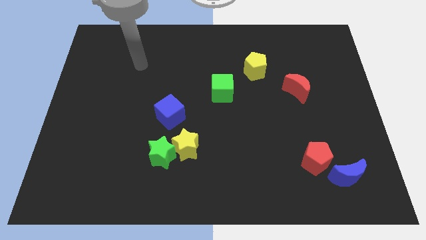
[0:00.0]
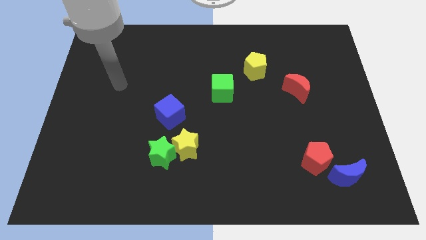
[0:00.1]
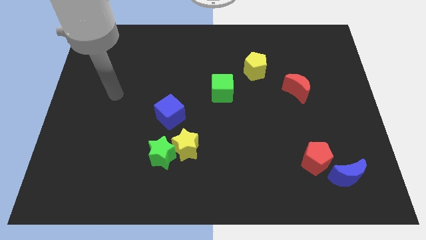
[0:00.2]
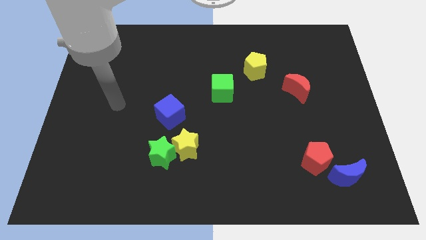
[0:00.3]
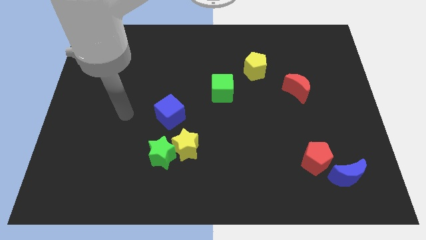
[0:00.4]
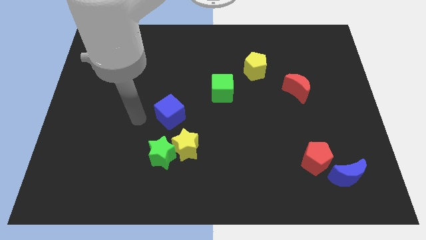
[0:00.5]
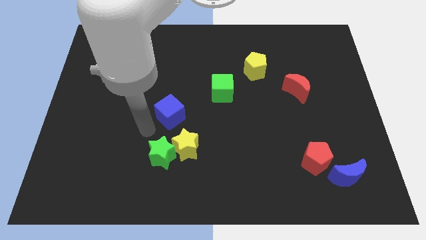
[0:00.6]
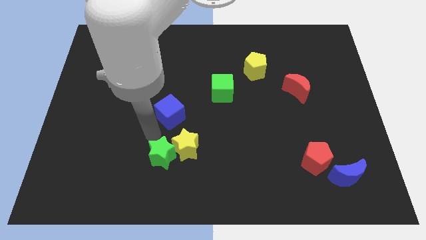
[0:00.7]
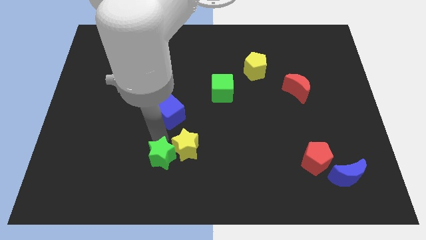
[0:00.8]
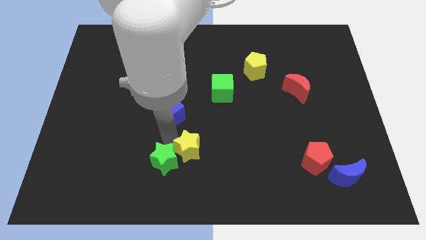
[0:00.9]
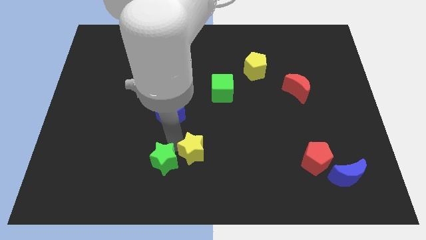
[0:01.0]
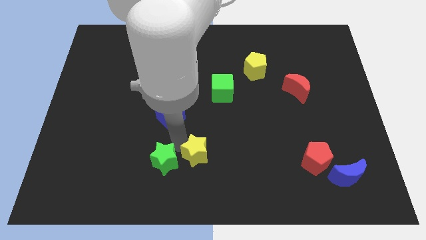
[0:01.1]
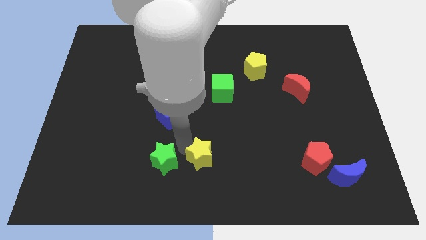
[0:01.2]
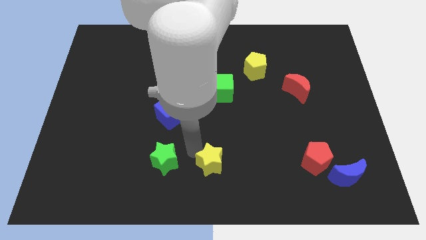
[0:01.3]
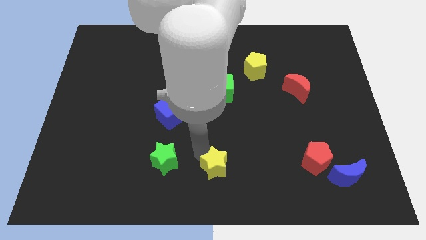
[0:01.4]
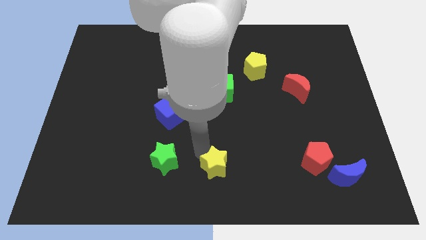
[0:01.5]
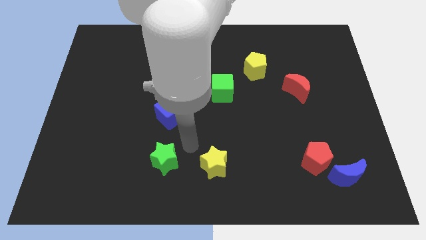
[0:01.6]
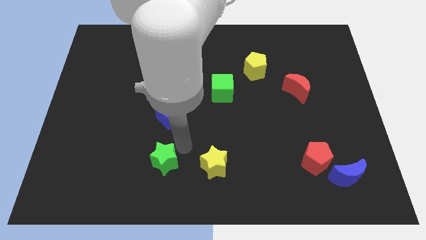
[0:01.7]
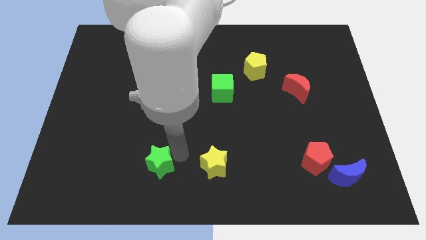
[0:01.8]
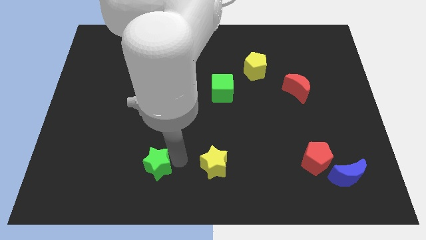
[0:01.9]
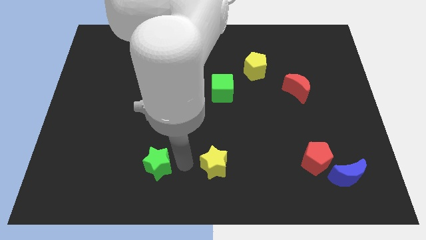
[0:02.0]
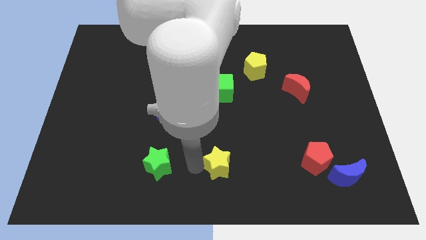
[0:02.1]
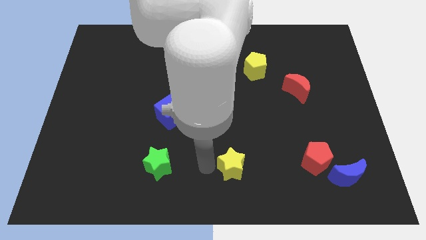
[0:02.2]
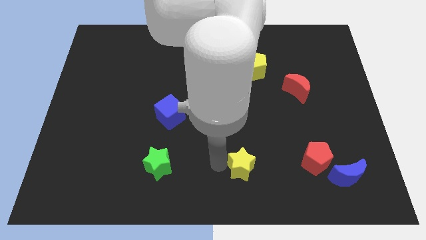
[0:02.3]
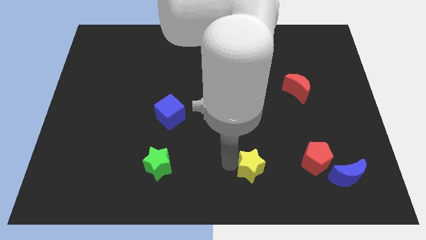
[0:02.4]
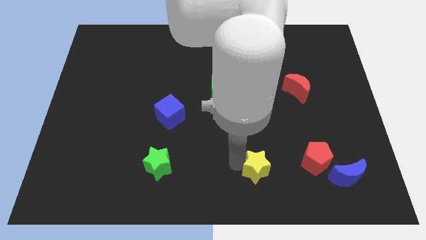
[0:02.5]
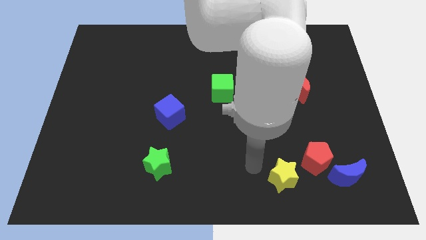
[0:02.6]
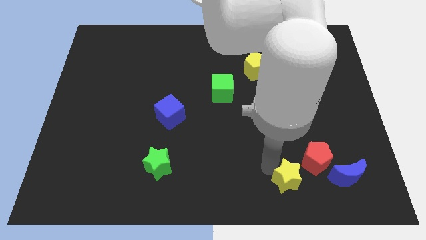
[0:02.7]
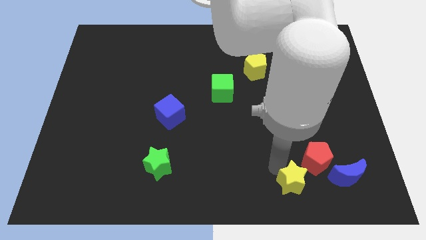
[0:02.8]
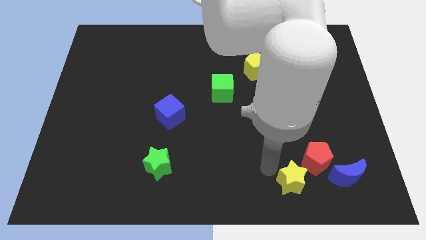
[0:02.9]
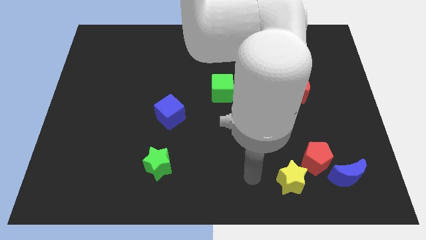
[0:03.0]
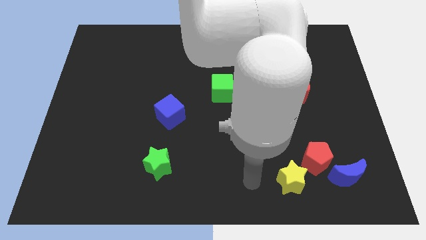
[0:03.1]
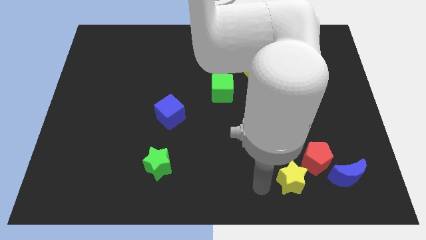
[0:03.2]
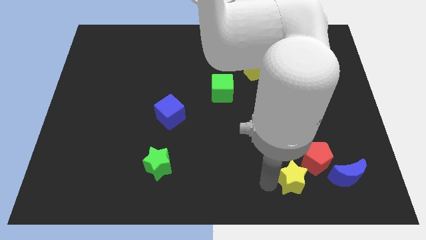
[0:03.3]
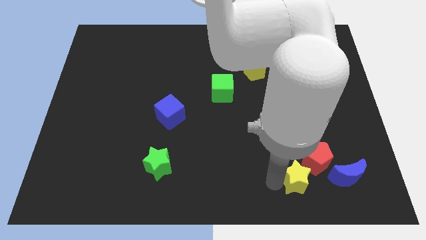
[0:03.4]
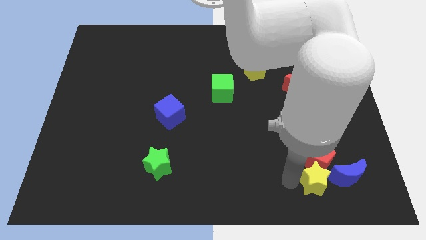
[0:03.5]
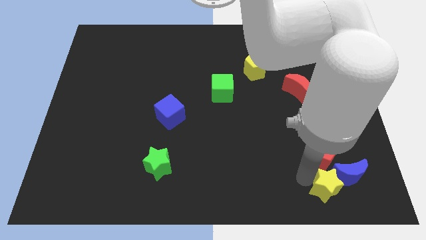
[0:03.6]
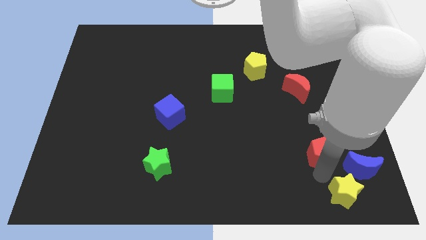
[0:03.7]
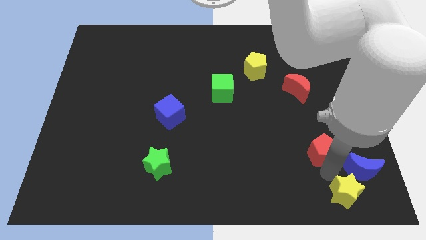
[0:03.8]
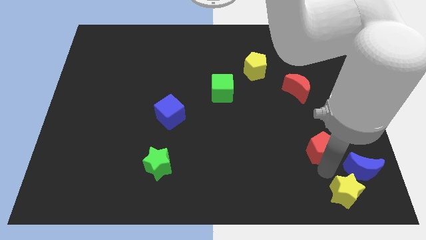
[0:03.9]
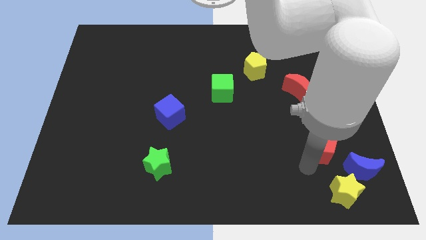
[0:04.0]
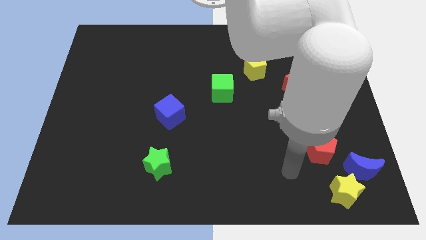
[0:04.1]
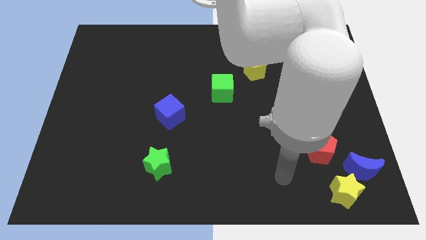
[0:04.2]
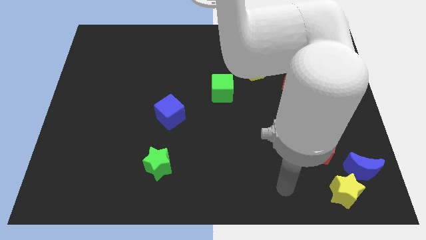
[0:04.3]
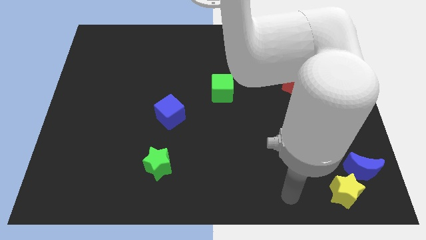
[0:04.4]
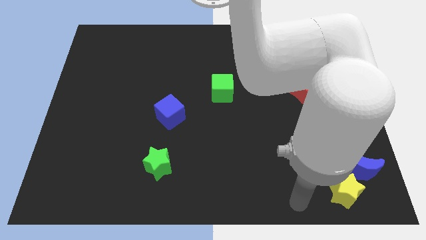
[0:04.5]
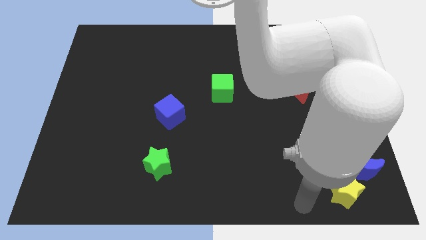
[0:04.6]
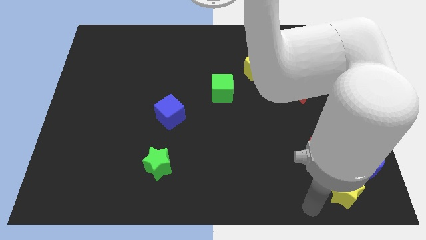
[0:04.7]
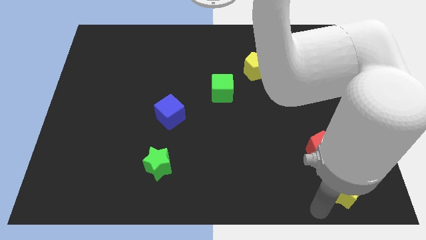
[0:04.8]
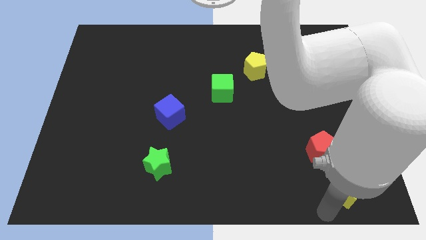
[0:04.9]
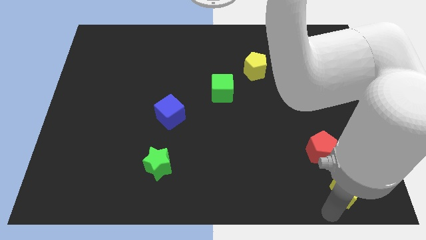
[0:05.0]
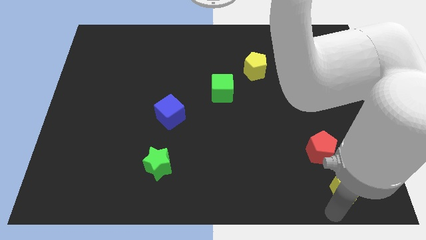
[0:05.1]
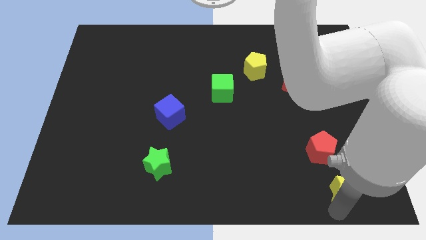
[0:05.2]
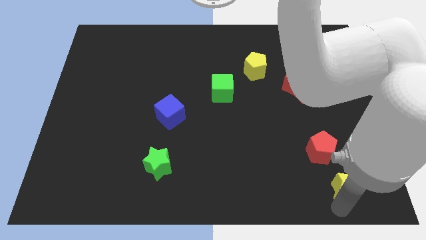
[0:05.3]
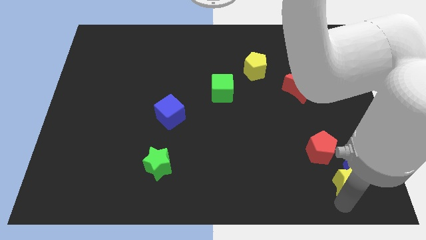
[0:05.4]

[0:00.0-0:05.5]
put the yellow star next to the blue moon

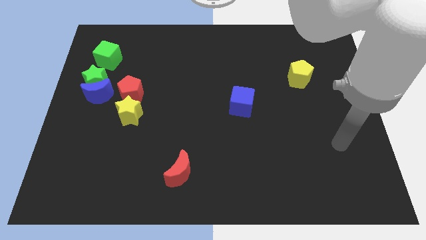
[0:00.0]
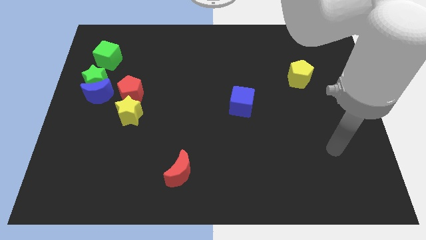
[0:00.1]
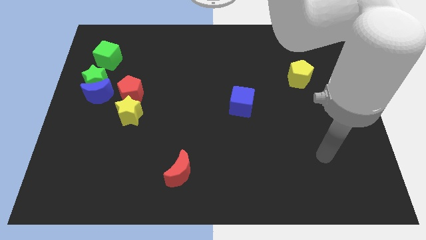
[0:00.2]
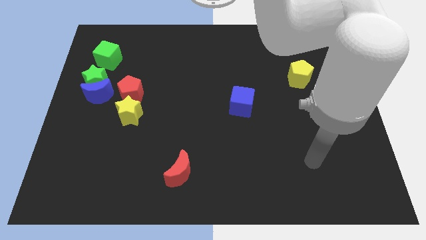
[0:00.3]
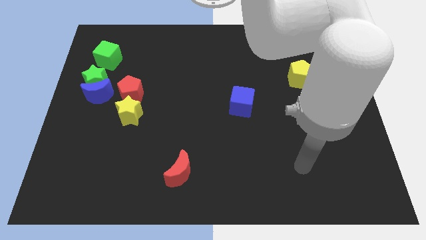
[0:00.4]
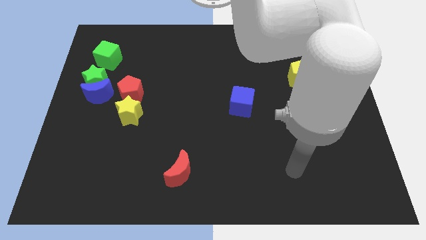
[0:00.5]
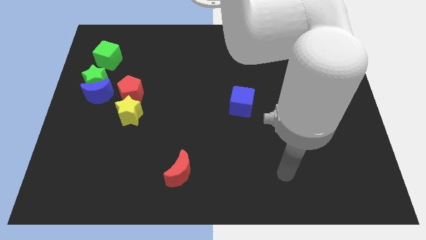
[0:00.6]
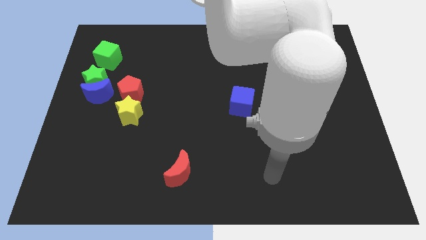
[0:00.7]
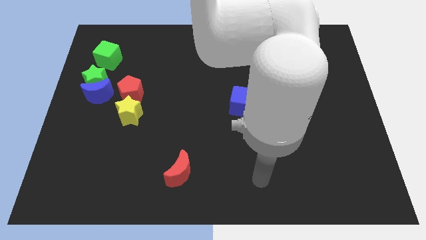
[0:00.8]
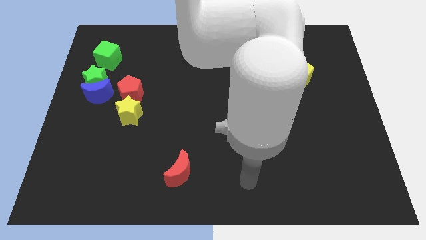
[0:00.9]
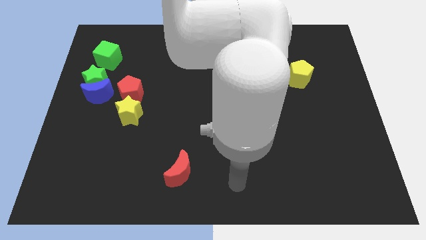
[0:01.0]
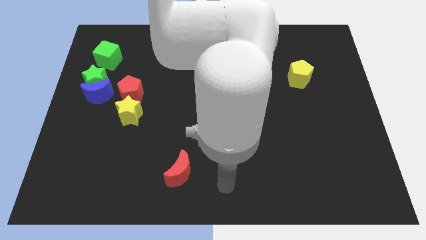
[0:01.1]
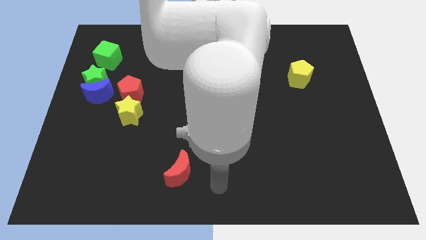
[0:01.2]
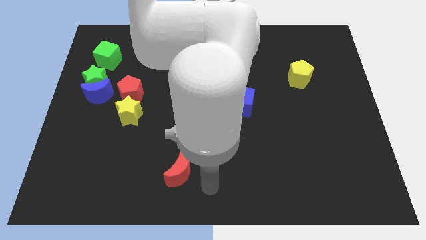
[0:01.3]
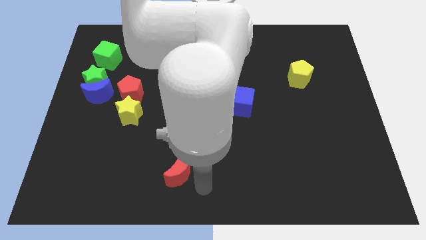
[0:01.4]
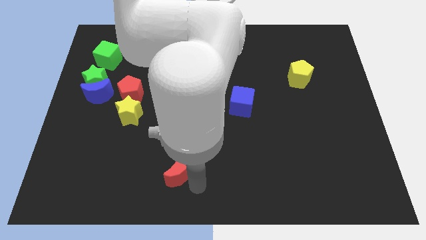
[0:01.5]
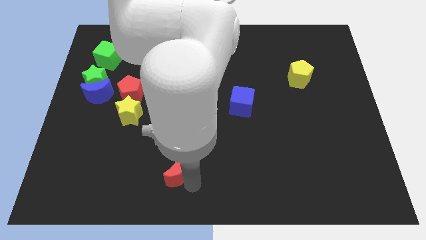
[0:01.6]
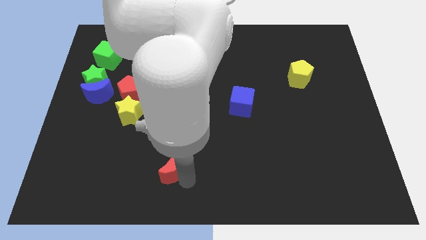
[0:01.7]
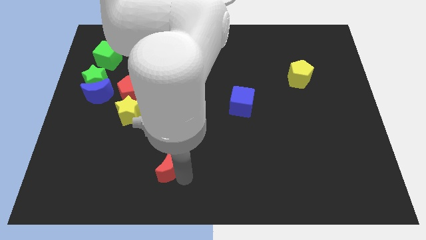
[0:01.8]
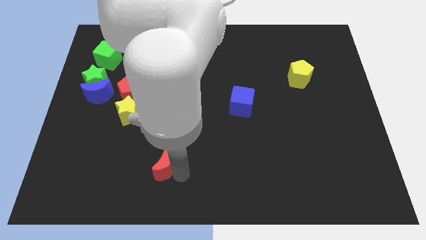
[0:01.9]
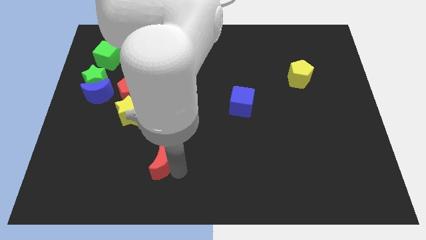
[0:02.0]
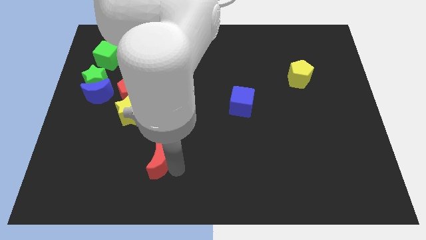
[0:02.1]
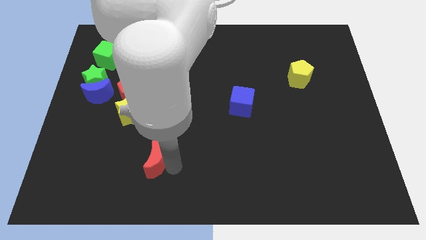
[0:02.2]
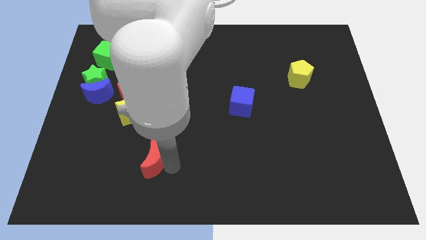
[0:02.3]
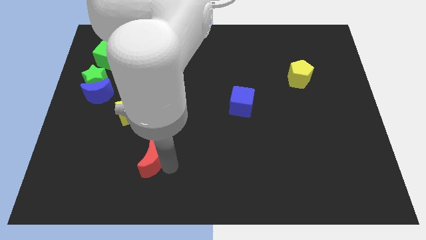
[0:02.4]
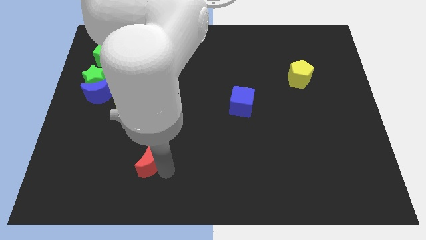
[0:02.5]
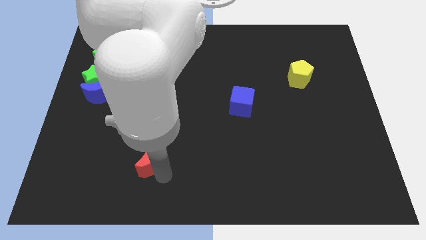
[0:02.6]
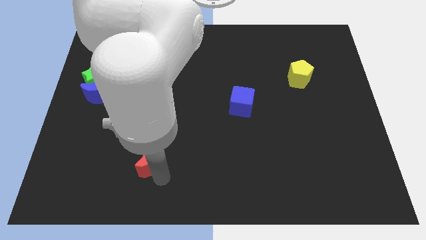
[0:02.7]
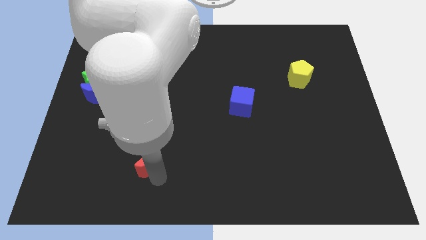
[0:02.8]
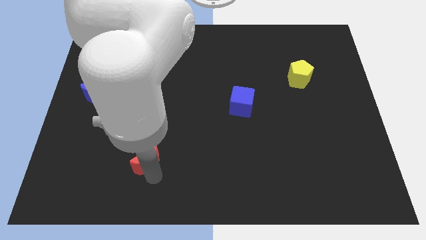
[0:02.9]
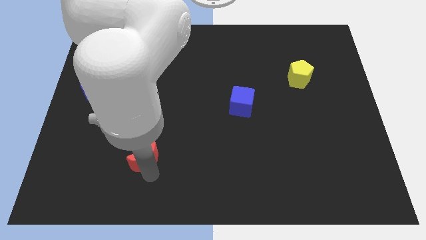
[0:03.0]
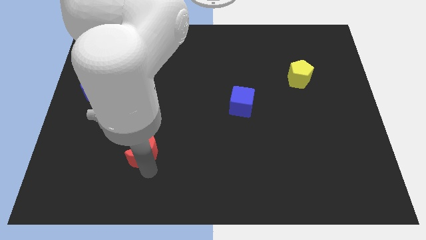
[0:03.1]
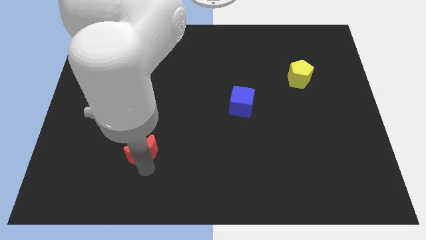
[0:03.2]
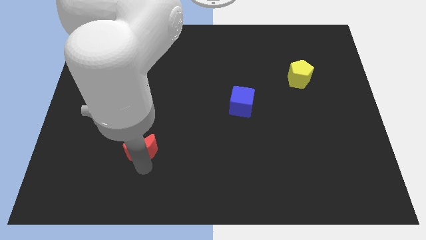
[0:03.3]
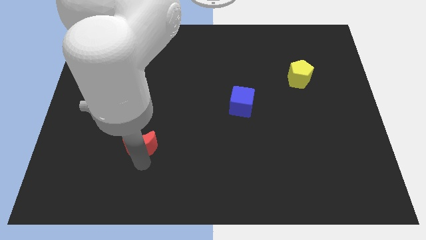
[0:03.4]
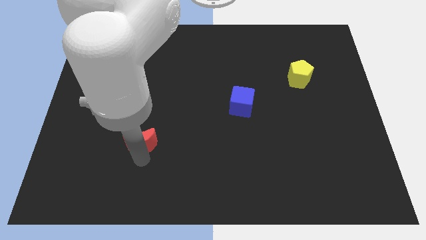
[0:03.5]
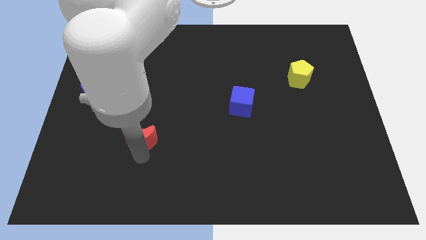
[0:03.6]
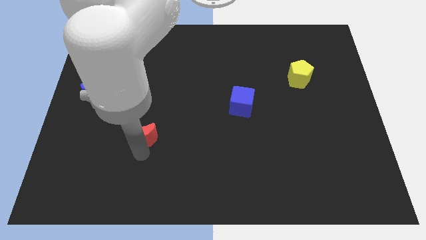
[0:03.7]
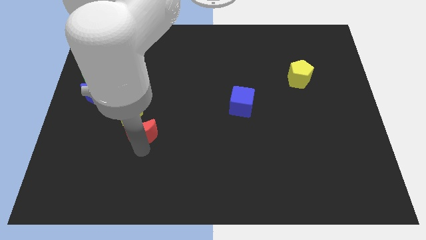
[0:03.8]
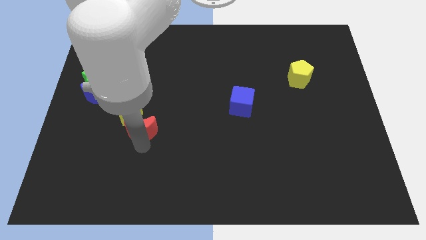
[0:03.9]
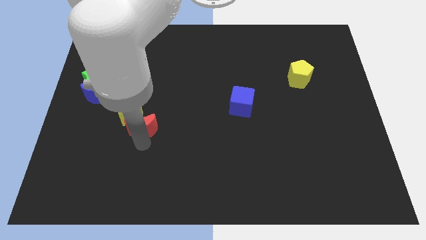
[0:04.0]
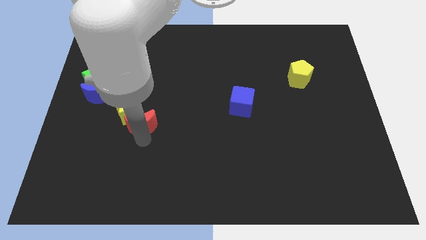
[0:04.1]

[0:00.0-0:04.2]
put the red moon towards the yellow star
